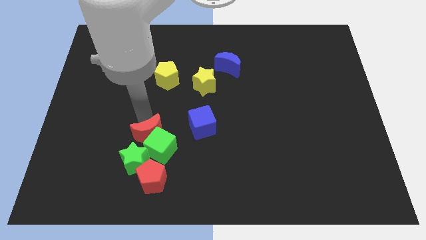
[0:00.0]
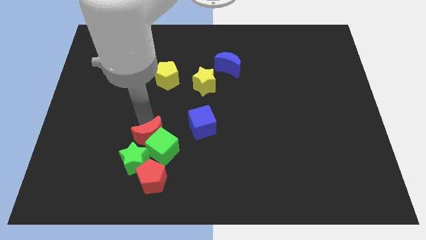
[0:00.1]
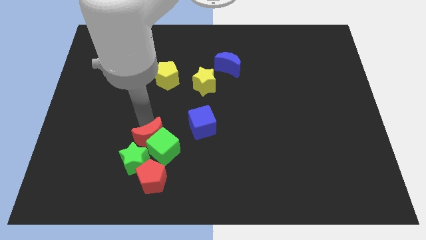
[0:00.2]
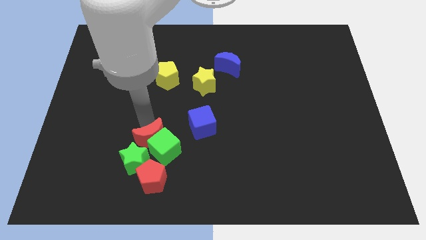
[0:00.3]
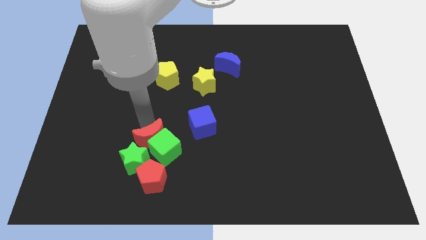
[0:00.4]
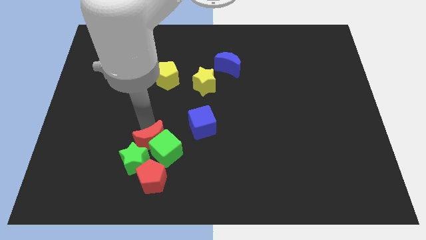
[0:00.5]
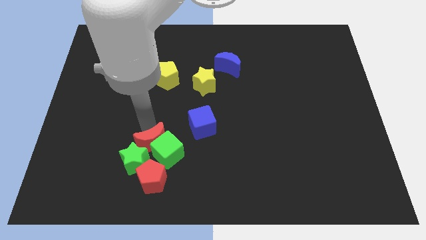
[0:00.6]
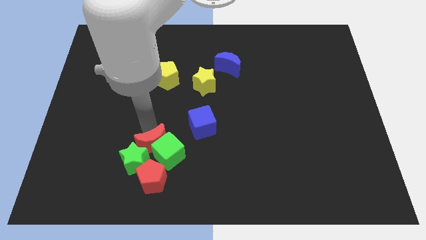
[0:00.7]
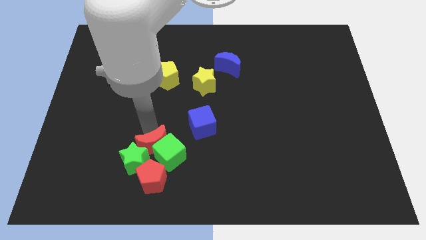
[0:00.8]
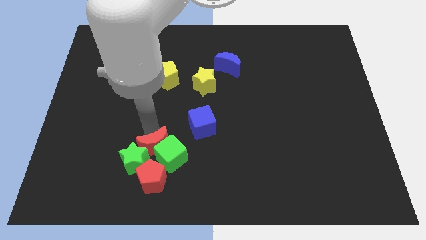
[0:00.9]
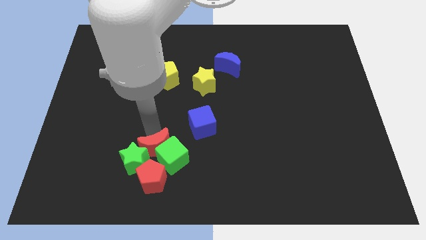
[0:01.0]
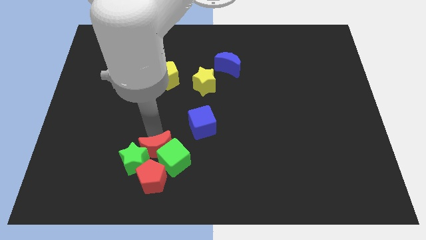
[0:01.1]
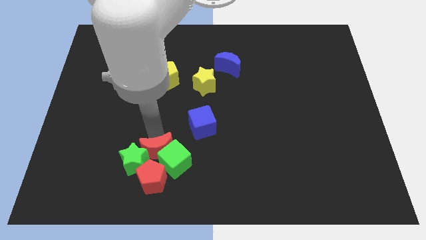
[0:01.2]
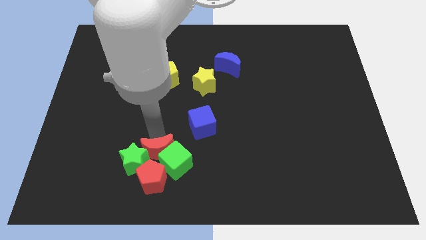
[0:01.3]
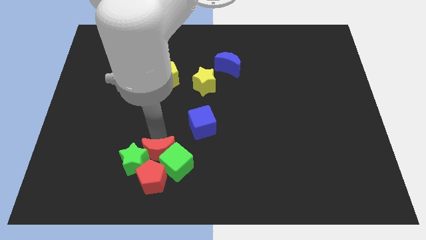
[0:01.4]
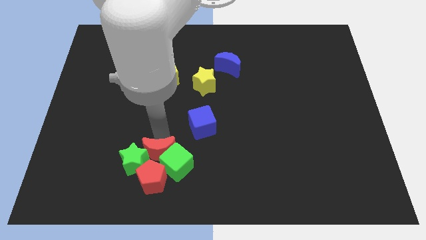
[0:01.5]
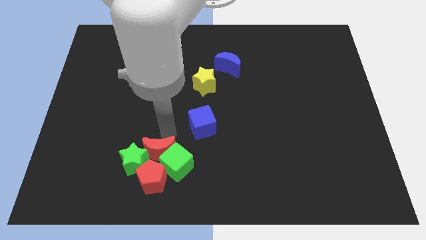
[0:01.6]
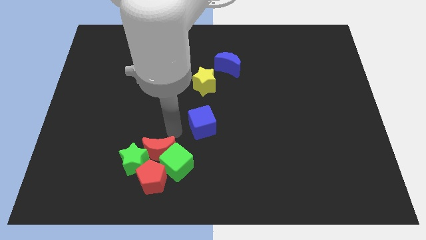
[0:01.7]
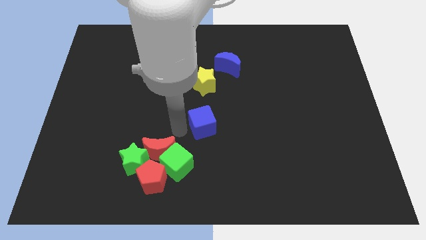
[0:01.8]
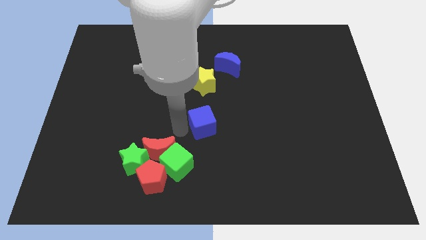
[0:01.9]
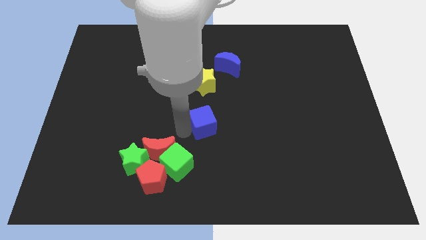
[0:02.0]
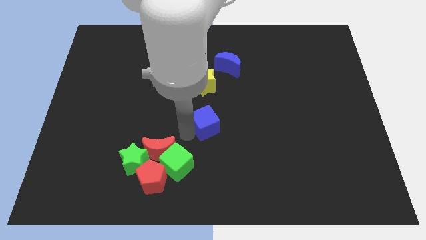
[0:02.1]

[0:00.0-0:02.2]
push the red moon to top right of green star

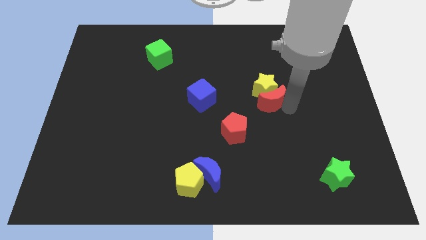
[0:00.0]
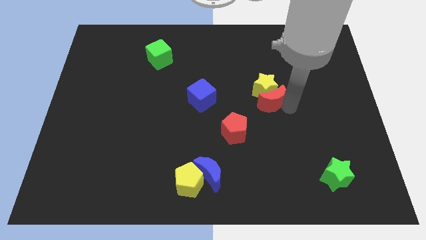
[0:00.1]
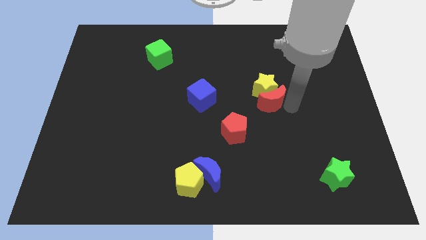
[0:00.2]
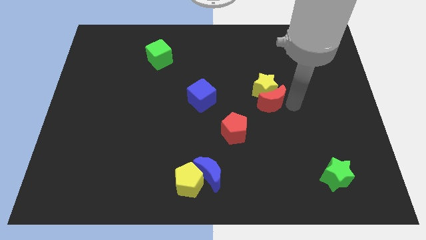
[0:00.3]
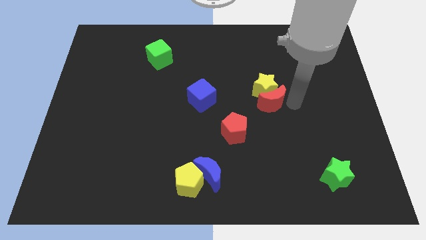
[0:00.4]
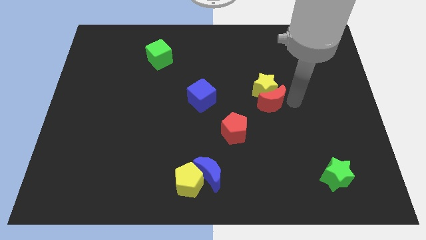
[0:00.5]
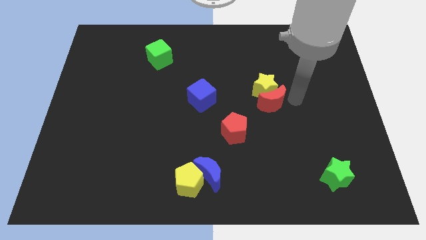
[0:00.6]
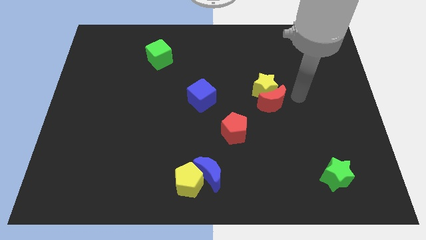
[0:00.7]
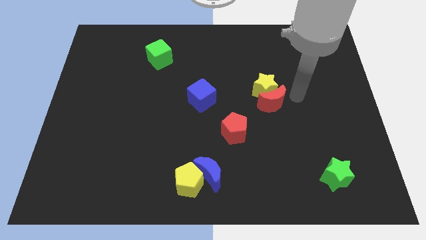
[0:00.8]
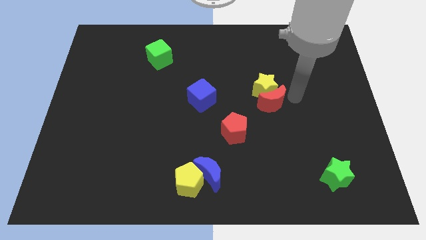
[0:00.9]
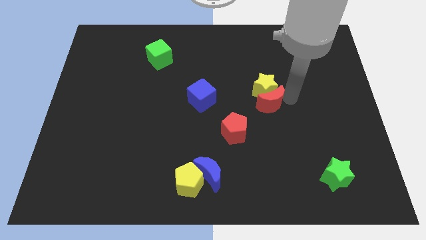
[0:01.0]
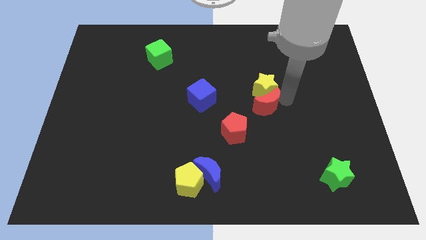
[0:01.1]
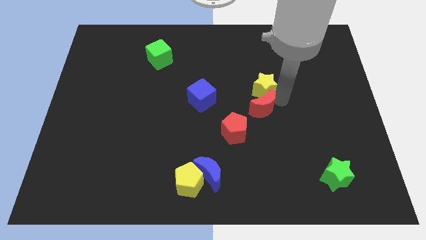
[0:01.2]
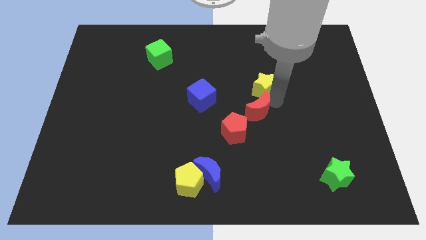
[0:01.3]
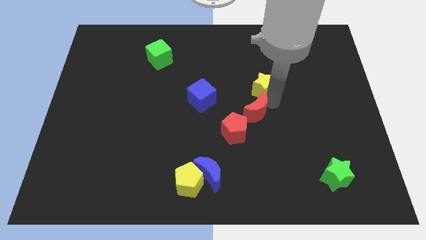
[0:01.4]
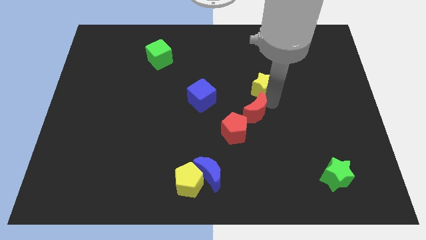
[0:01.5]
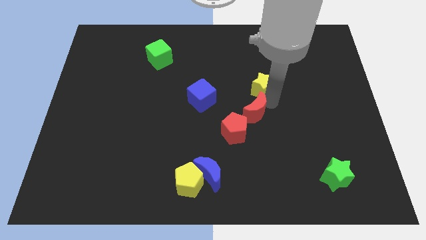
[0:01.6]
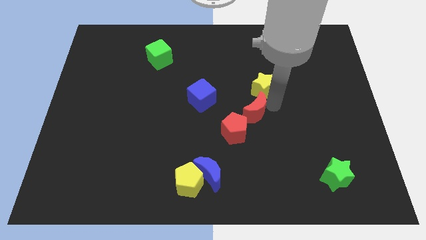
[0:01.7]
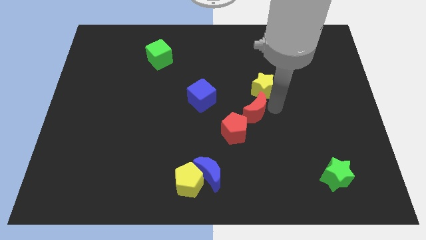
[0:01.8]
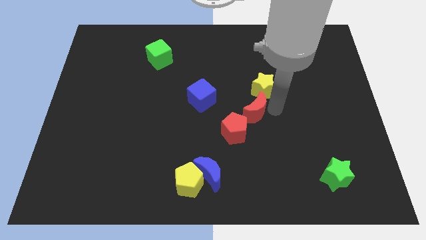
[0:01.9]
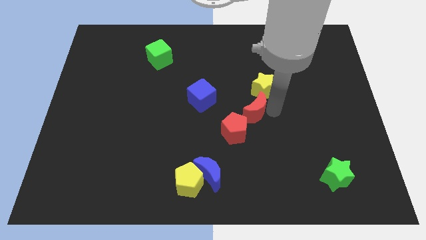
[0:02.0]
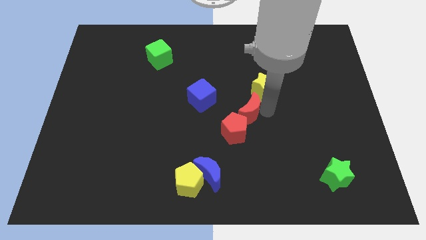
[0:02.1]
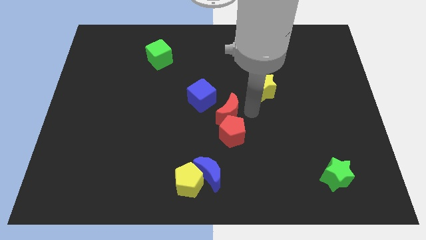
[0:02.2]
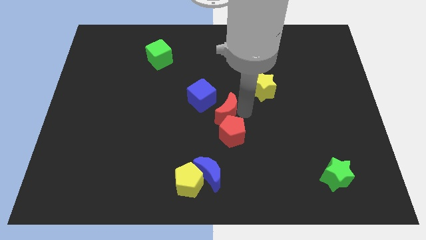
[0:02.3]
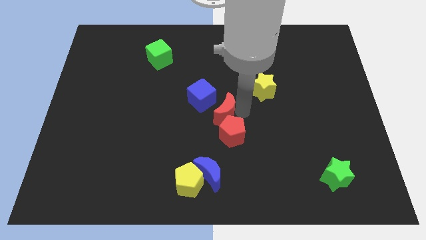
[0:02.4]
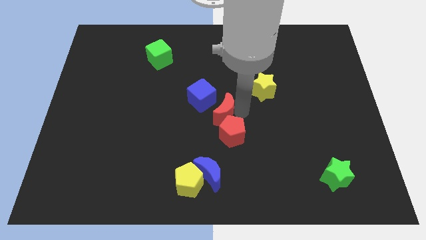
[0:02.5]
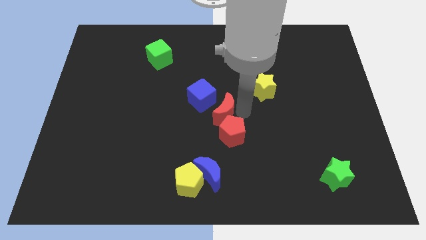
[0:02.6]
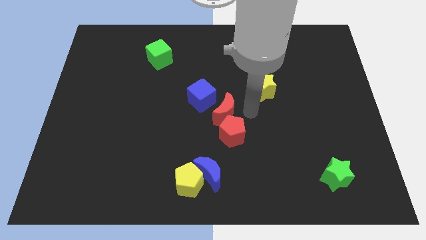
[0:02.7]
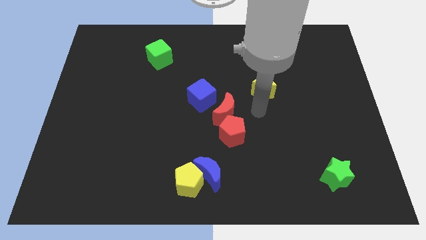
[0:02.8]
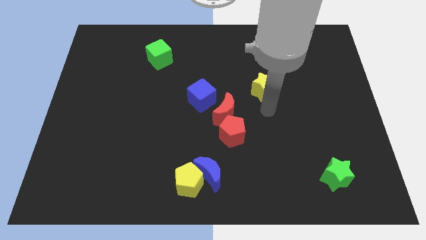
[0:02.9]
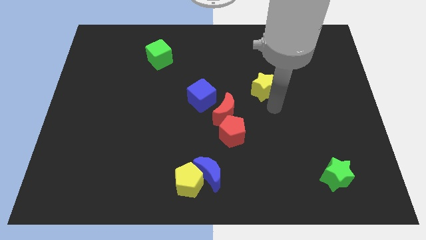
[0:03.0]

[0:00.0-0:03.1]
push the red crescent to the top of the red pentagon

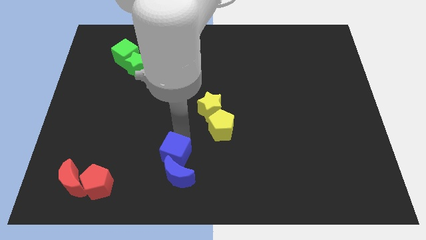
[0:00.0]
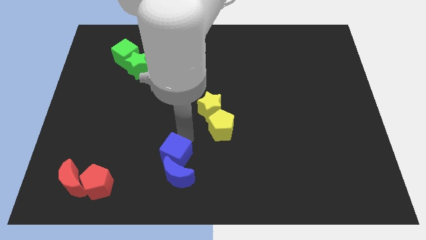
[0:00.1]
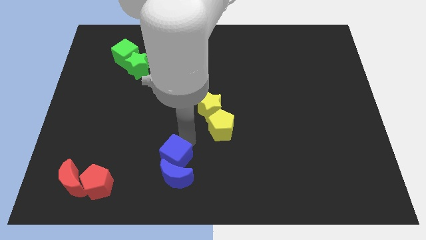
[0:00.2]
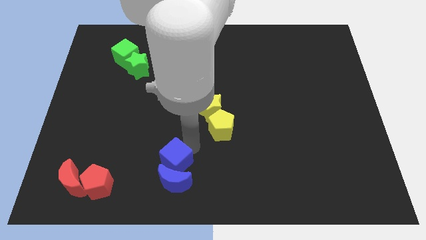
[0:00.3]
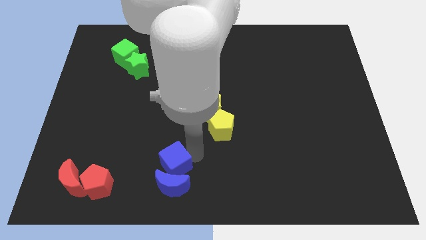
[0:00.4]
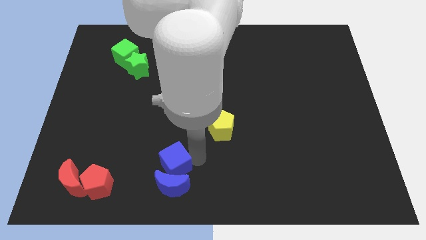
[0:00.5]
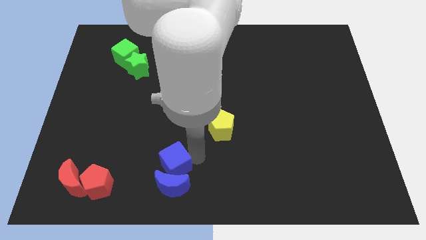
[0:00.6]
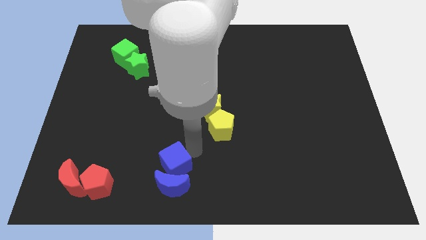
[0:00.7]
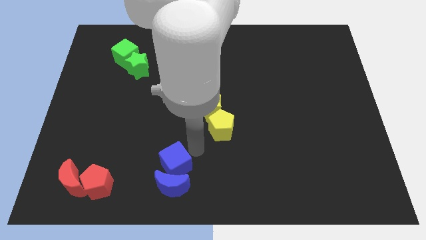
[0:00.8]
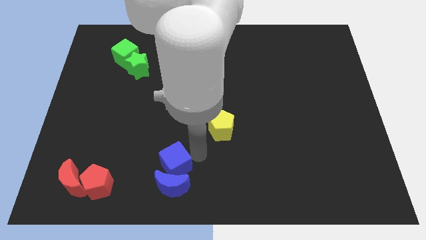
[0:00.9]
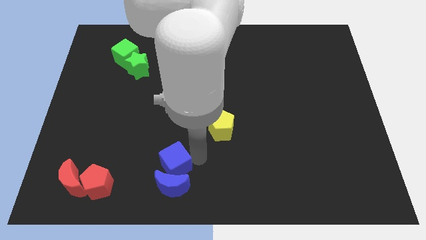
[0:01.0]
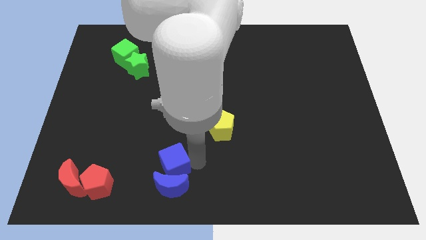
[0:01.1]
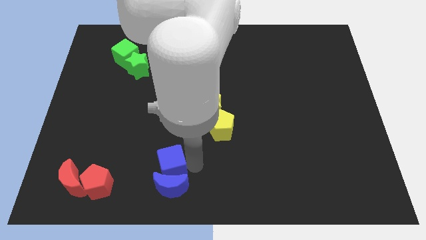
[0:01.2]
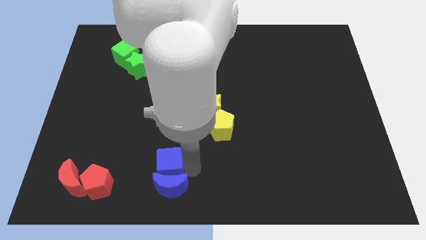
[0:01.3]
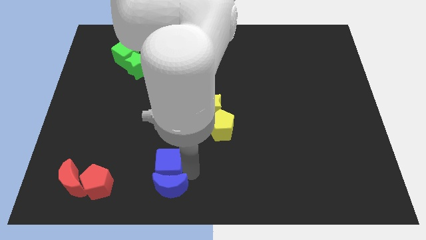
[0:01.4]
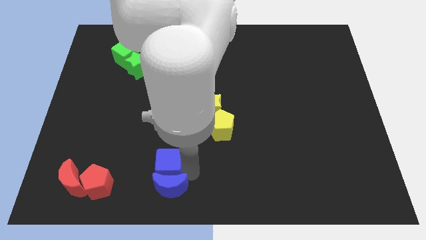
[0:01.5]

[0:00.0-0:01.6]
slightly push the blue cube along the blue crescent to the bottom of the board

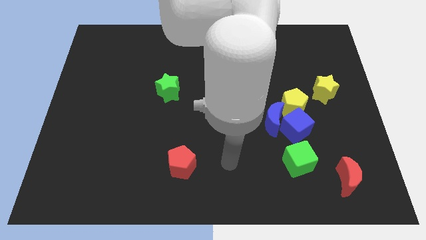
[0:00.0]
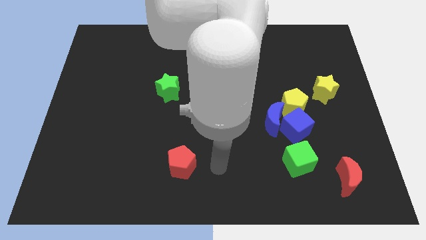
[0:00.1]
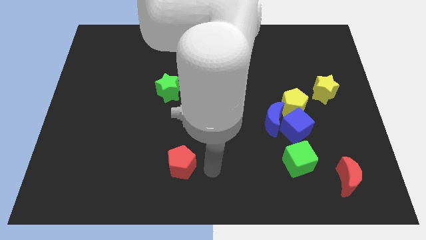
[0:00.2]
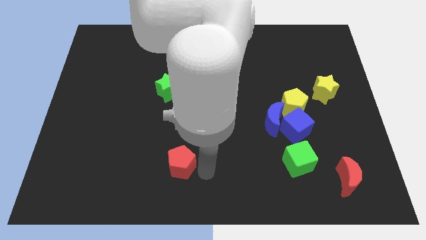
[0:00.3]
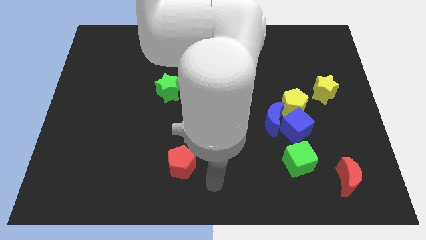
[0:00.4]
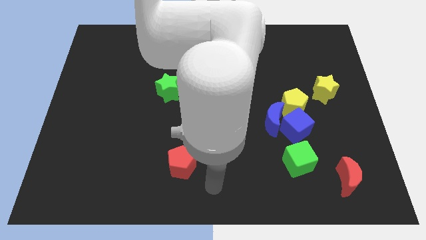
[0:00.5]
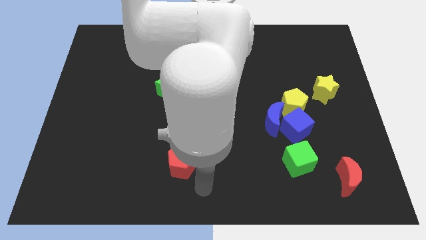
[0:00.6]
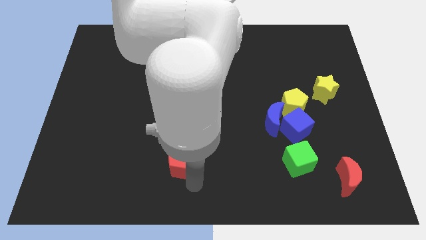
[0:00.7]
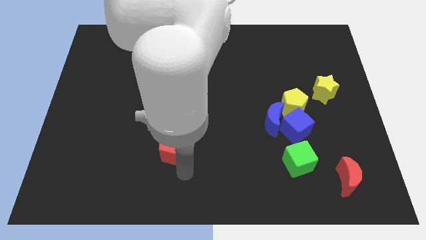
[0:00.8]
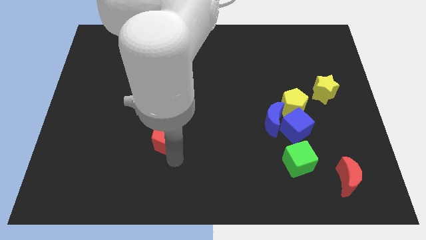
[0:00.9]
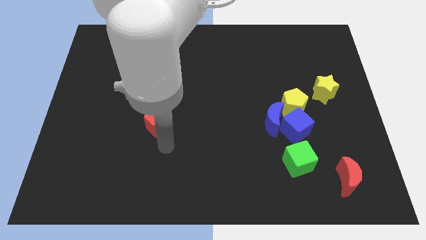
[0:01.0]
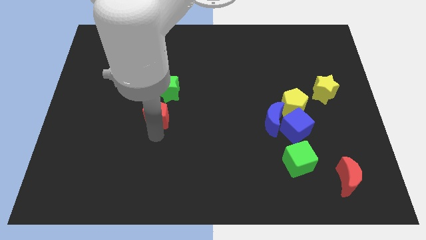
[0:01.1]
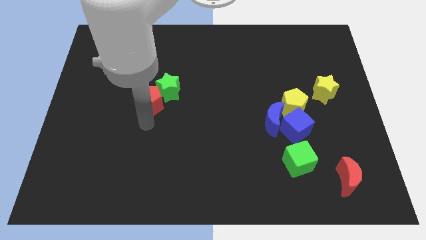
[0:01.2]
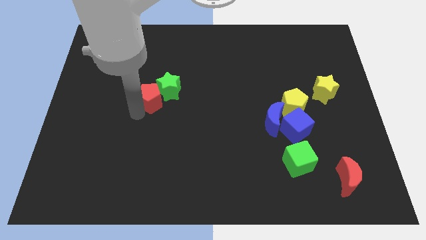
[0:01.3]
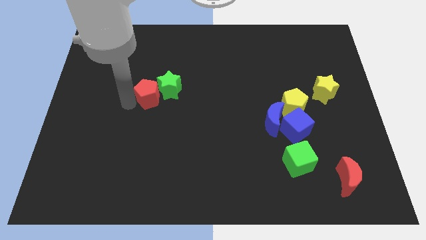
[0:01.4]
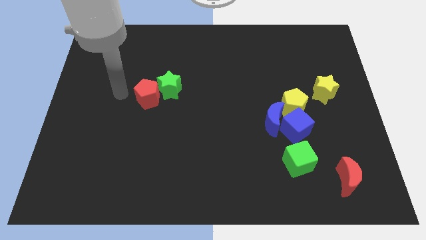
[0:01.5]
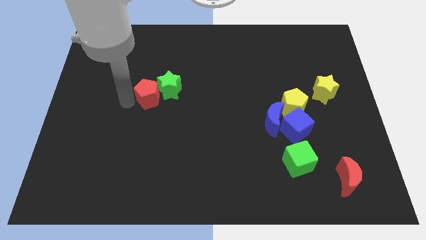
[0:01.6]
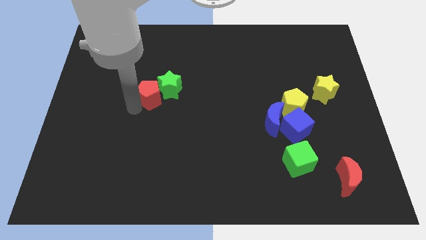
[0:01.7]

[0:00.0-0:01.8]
push the red pentagon to the left of the green star

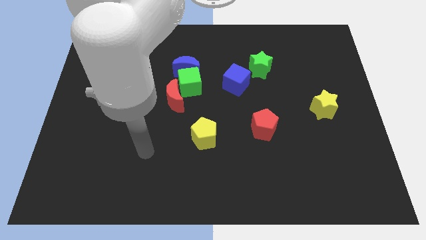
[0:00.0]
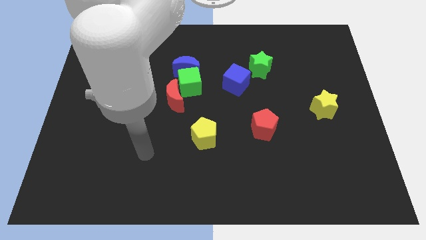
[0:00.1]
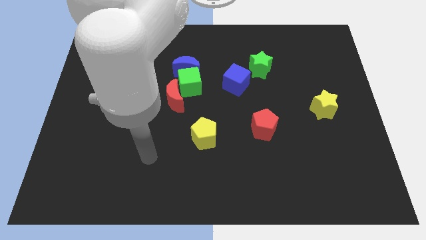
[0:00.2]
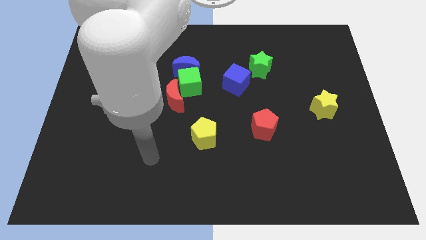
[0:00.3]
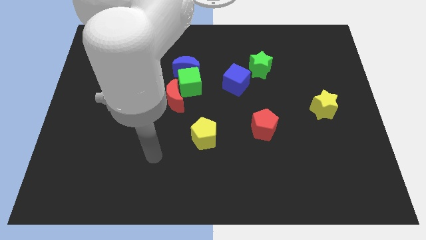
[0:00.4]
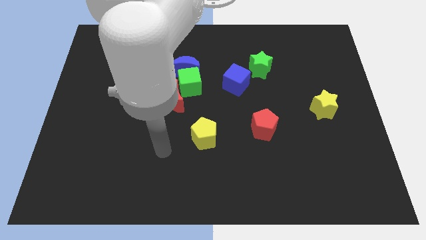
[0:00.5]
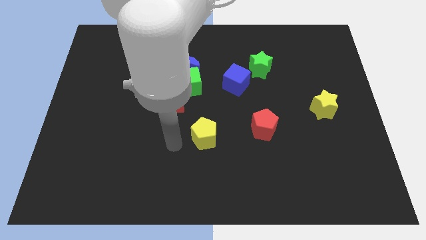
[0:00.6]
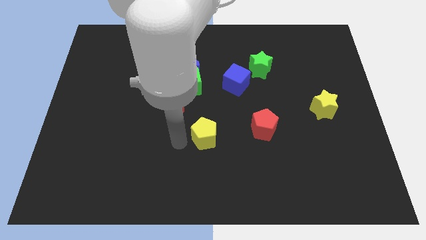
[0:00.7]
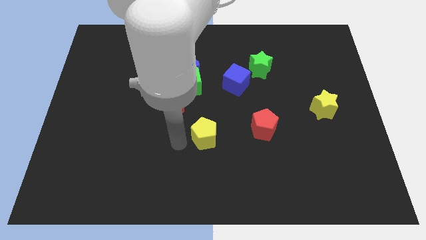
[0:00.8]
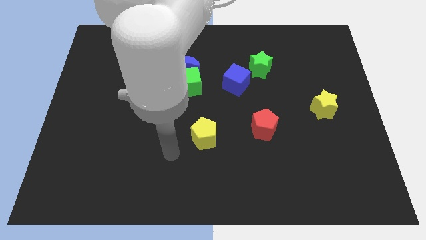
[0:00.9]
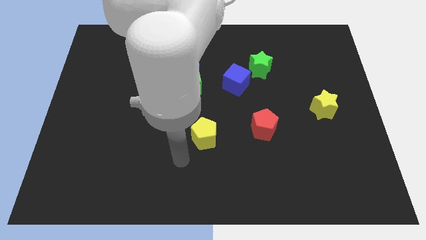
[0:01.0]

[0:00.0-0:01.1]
point your arm to the bottom left of the yellow pentagon
